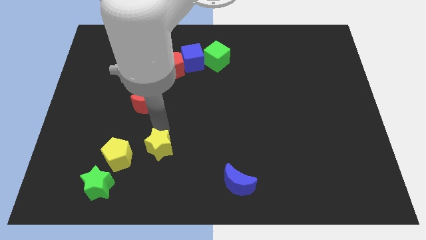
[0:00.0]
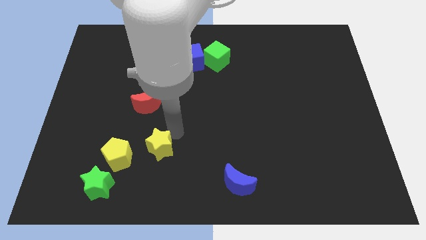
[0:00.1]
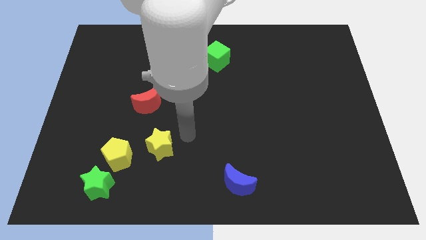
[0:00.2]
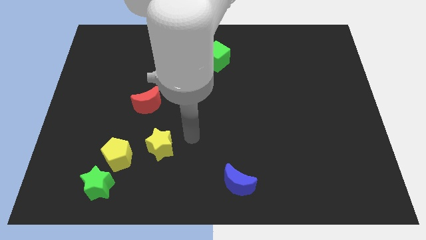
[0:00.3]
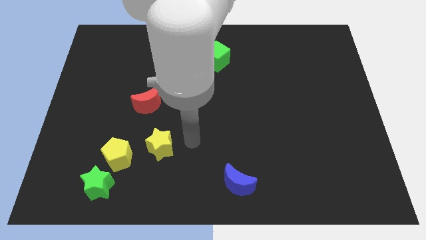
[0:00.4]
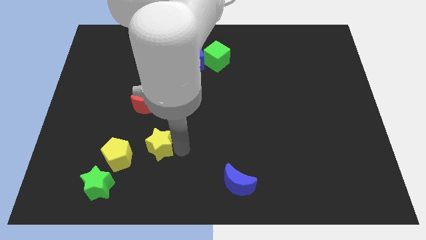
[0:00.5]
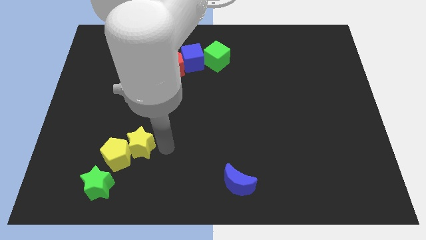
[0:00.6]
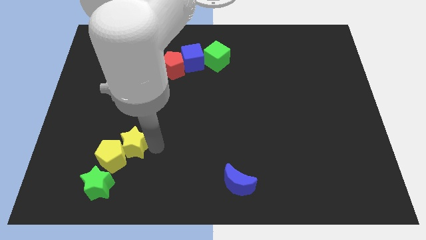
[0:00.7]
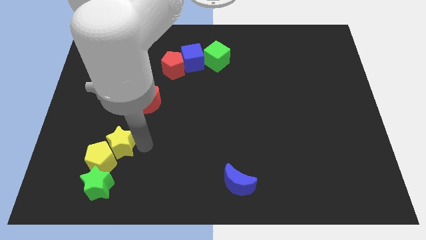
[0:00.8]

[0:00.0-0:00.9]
move yellow star in to the yellow pentagon

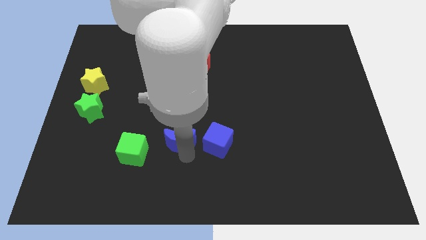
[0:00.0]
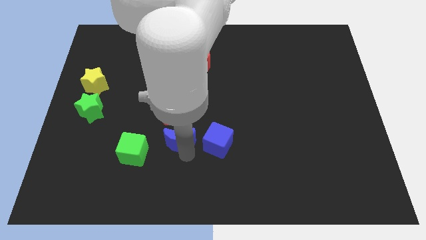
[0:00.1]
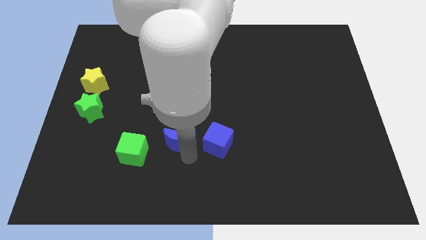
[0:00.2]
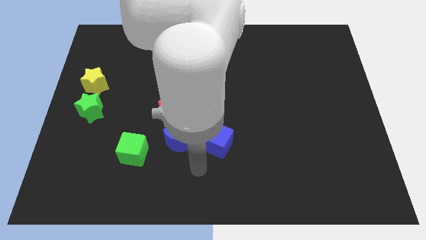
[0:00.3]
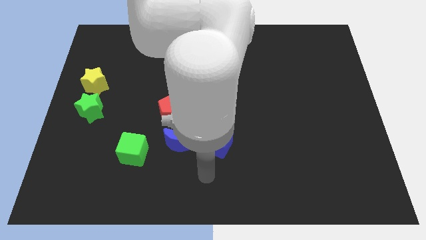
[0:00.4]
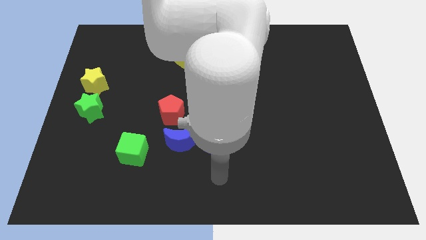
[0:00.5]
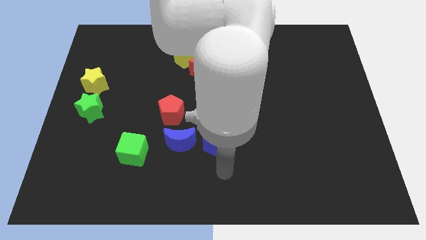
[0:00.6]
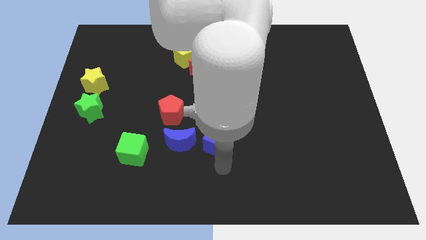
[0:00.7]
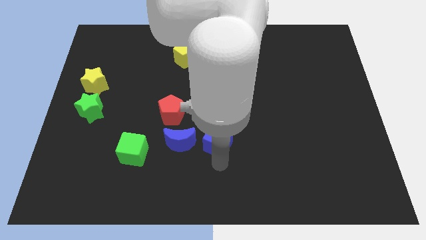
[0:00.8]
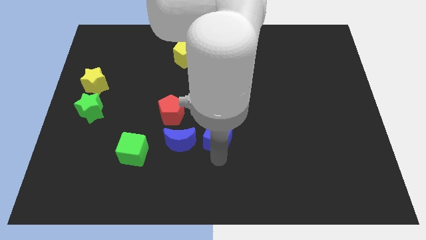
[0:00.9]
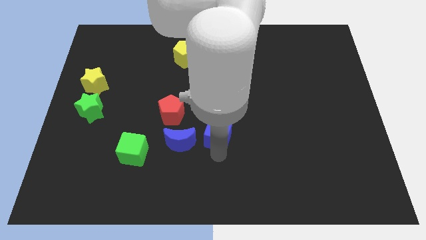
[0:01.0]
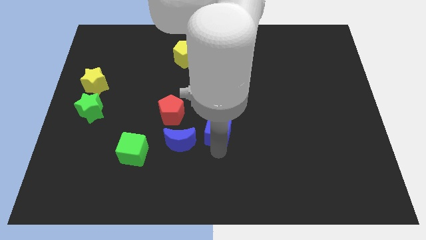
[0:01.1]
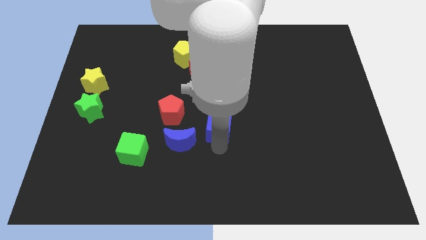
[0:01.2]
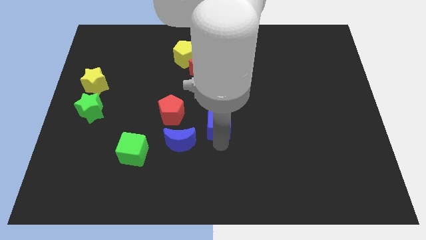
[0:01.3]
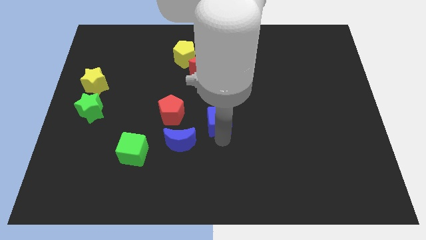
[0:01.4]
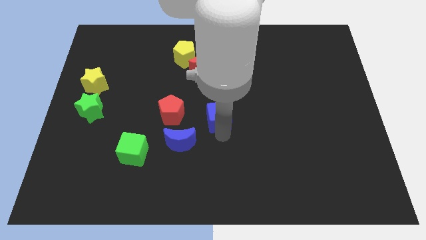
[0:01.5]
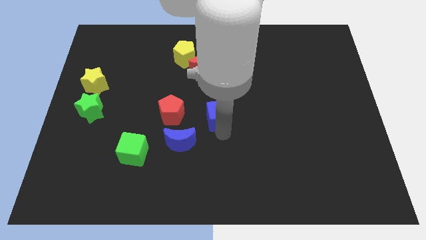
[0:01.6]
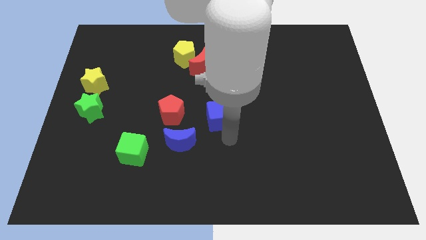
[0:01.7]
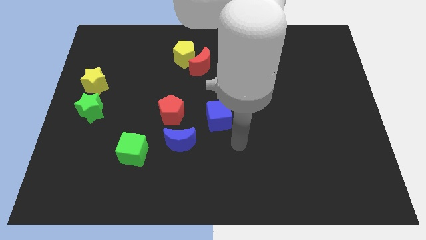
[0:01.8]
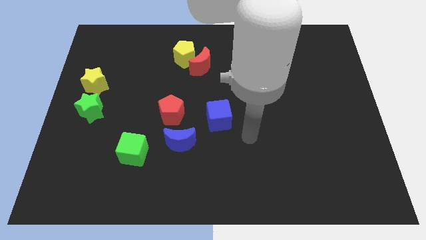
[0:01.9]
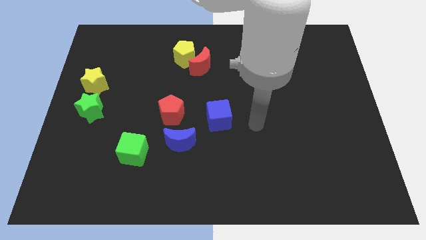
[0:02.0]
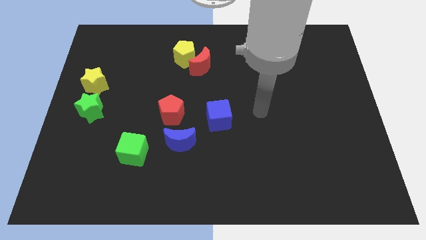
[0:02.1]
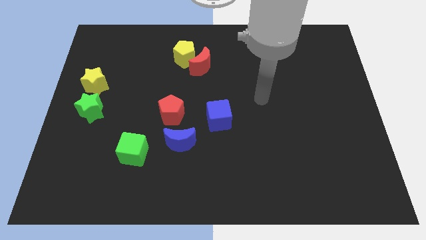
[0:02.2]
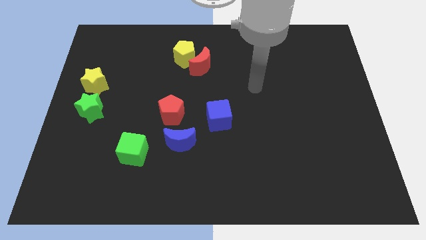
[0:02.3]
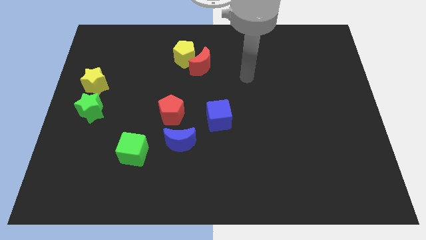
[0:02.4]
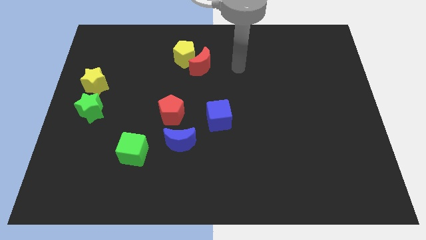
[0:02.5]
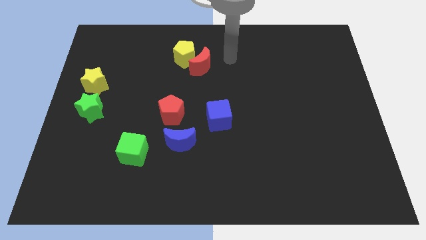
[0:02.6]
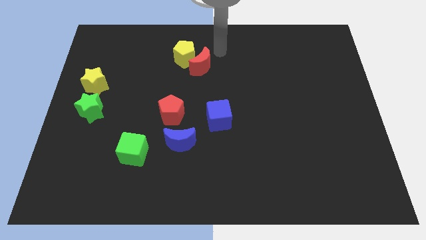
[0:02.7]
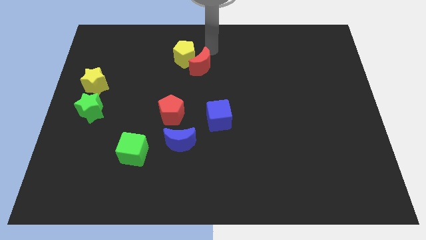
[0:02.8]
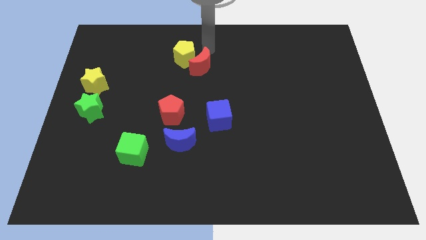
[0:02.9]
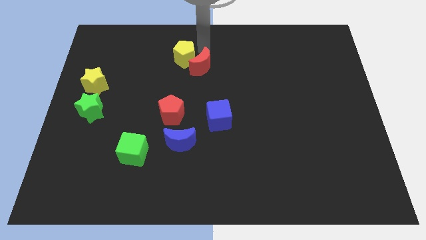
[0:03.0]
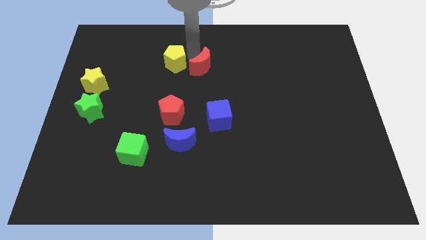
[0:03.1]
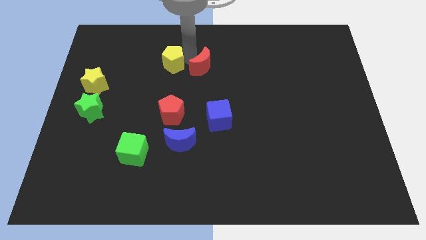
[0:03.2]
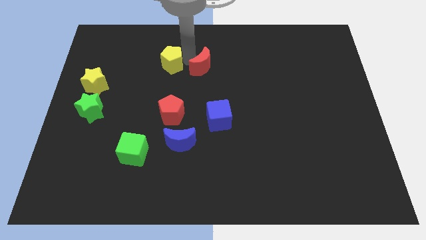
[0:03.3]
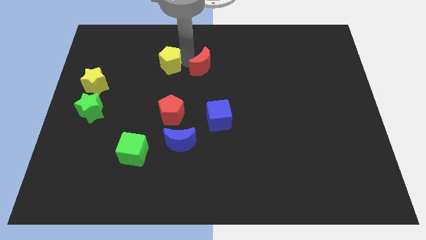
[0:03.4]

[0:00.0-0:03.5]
separate the yellow pentagon and red crescent on top of board

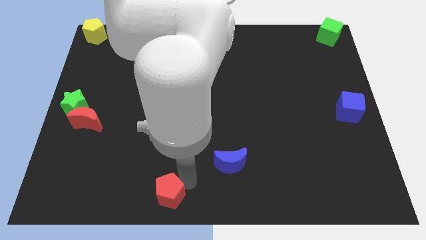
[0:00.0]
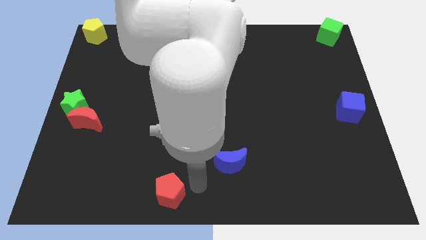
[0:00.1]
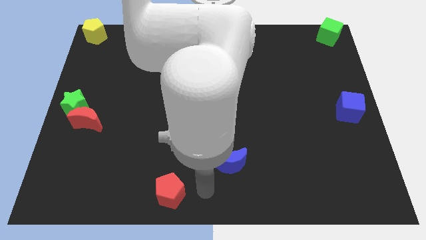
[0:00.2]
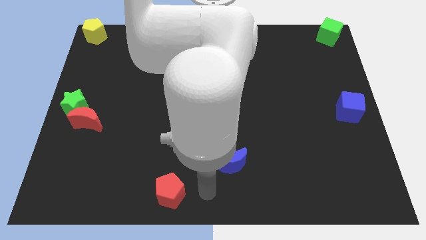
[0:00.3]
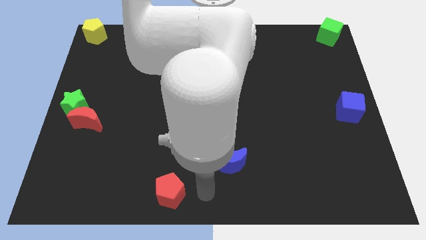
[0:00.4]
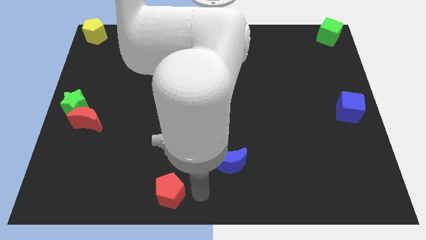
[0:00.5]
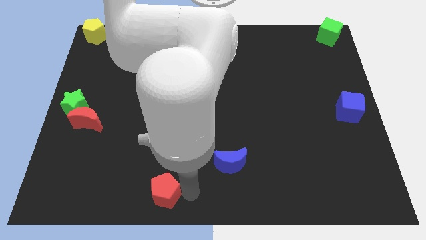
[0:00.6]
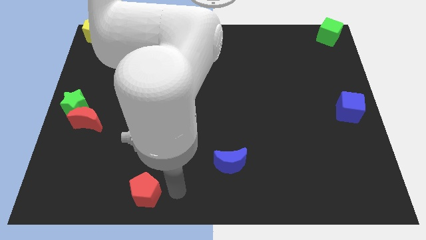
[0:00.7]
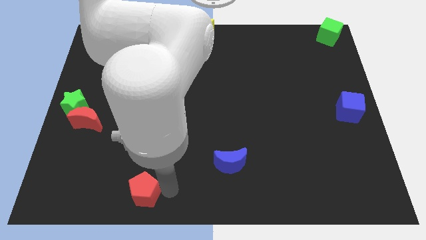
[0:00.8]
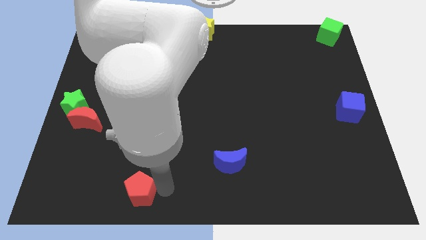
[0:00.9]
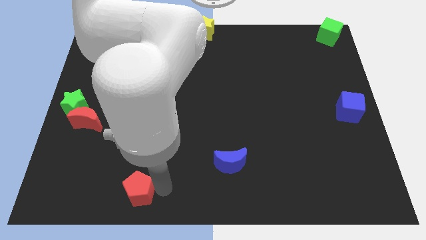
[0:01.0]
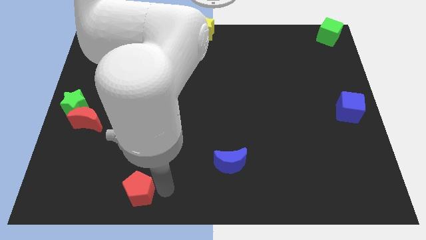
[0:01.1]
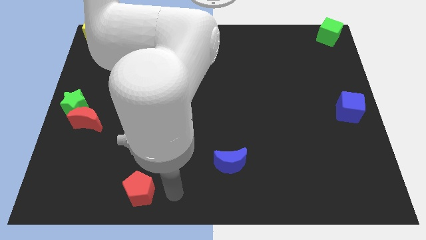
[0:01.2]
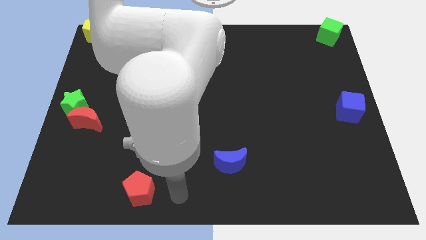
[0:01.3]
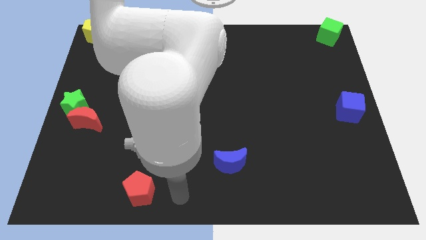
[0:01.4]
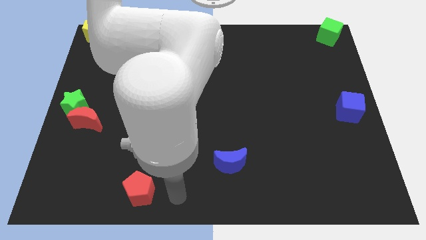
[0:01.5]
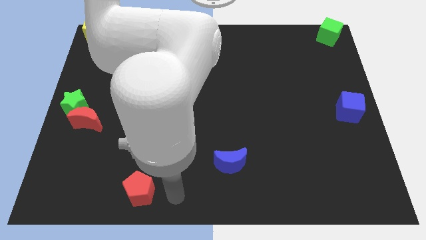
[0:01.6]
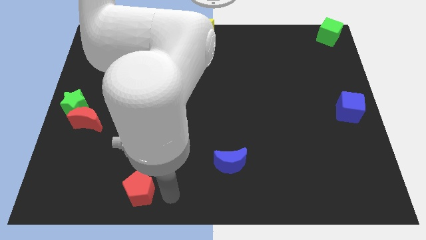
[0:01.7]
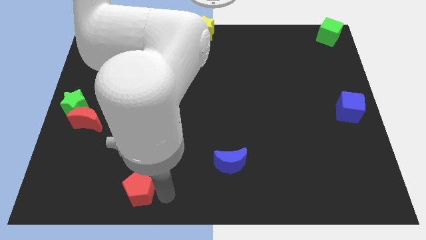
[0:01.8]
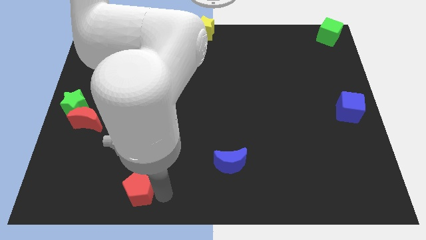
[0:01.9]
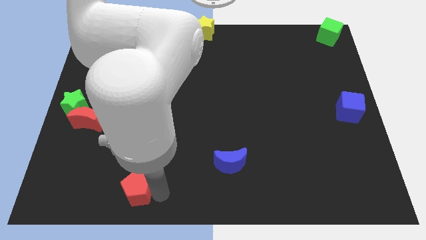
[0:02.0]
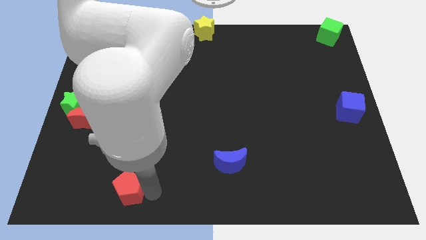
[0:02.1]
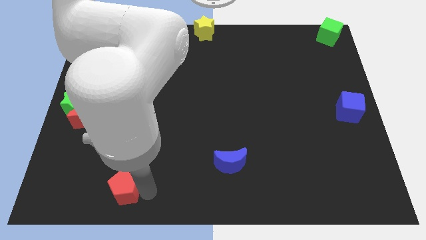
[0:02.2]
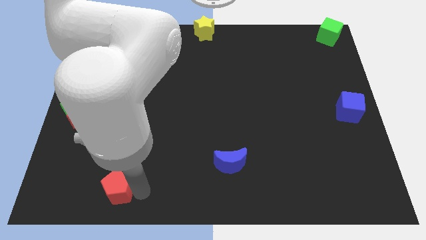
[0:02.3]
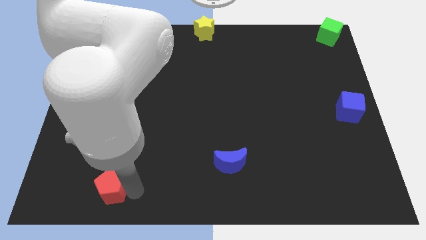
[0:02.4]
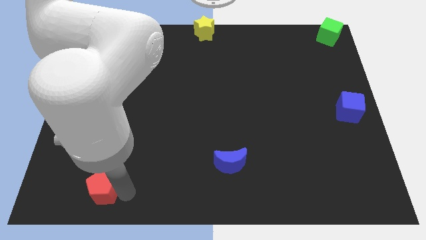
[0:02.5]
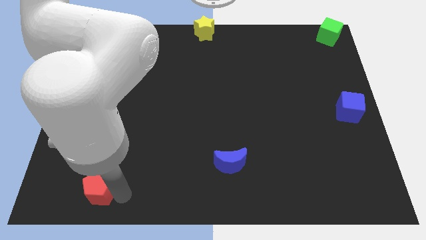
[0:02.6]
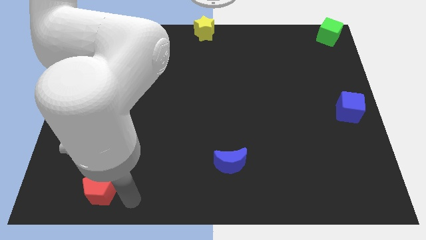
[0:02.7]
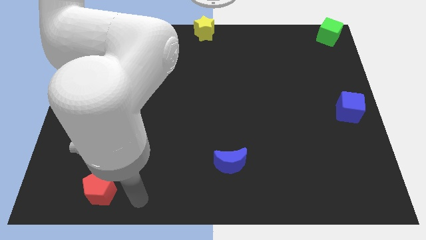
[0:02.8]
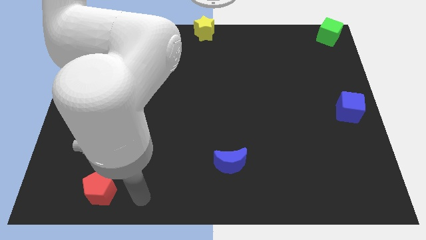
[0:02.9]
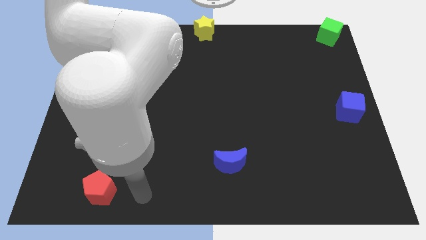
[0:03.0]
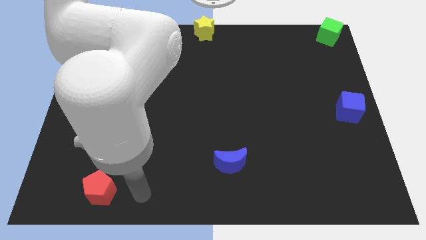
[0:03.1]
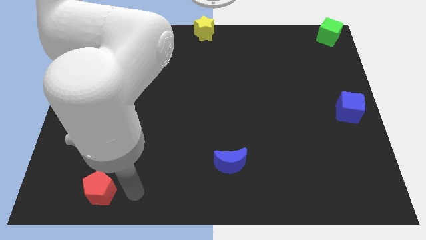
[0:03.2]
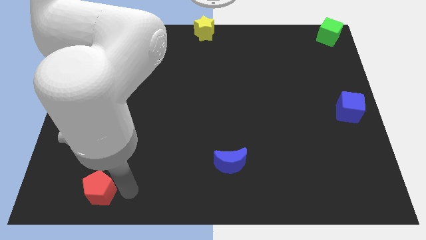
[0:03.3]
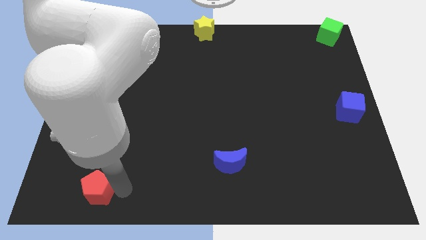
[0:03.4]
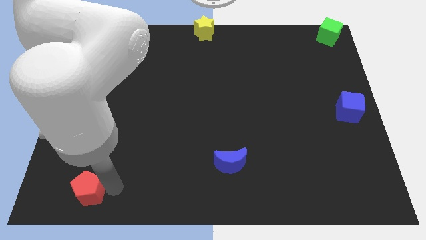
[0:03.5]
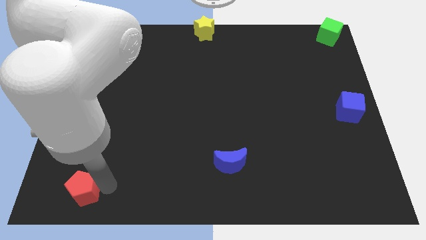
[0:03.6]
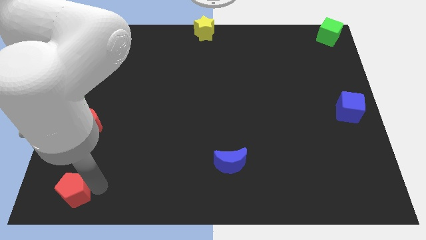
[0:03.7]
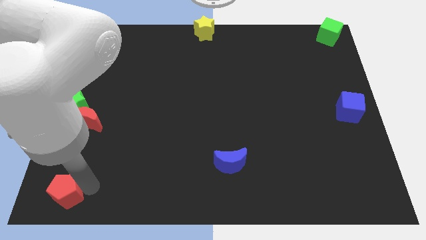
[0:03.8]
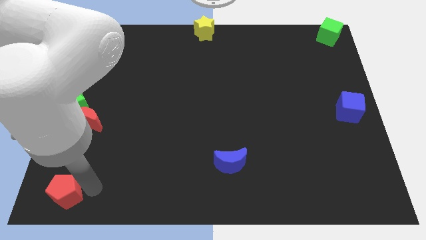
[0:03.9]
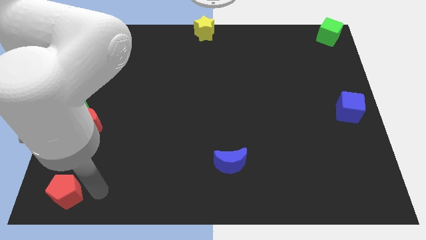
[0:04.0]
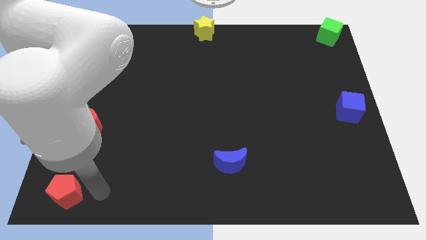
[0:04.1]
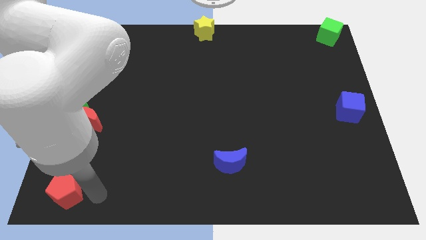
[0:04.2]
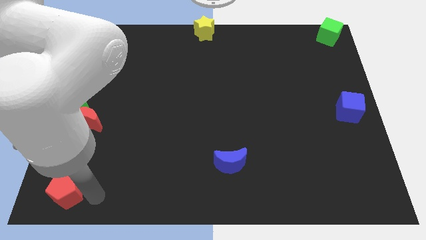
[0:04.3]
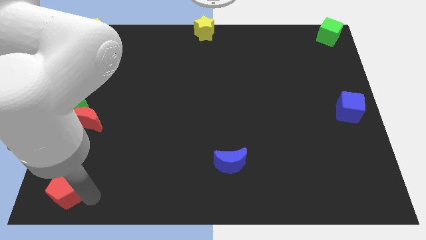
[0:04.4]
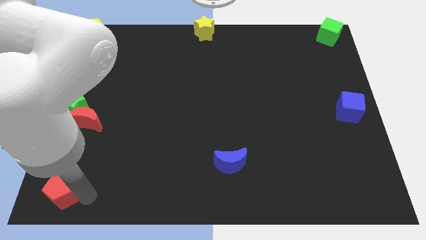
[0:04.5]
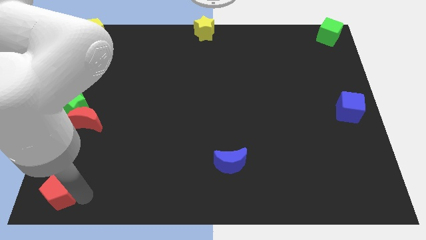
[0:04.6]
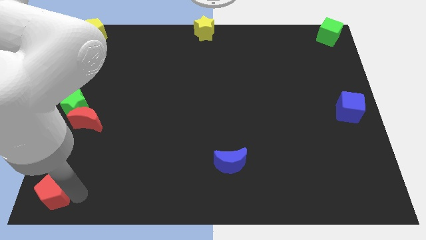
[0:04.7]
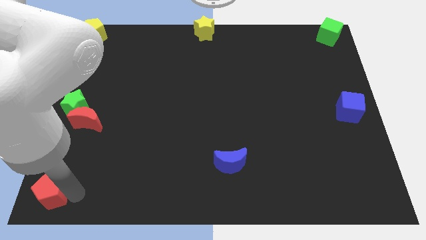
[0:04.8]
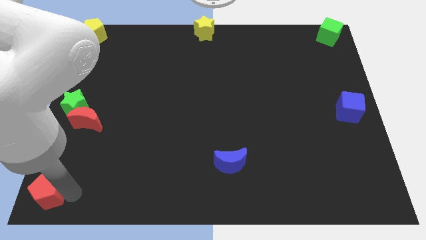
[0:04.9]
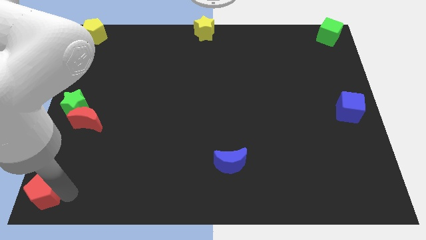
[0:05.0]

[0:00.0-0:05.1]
place the red pentagon to the bottom left corner of the board
